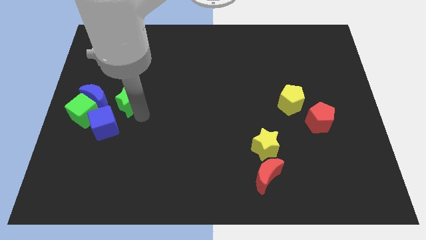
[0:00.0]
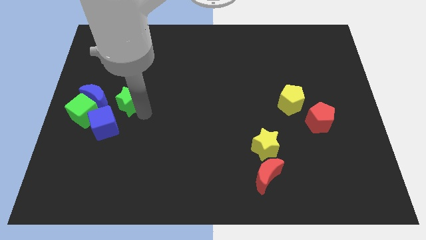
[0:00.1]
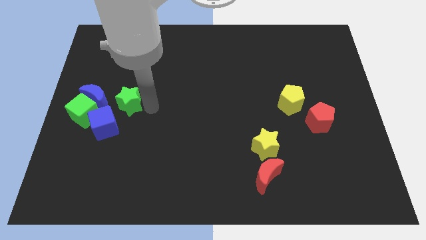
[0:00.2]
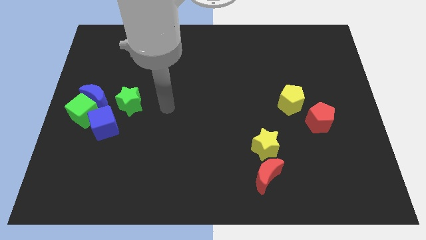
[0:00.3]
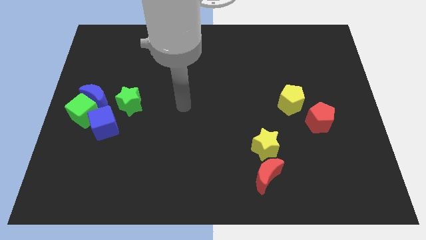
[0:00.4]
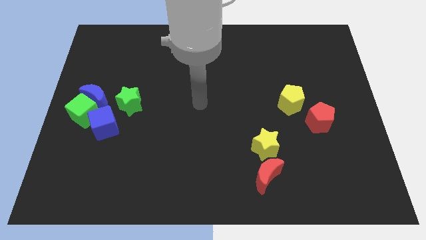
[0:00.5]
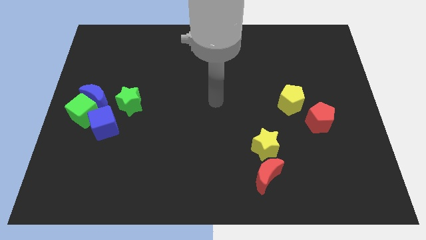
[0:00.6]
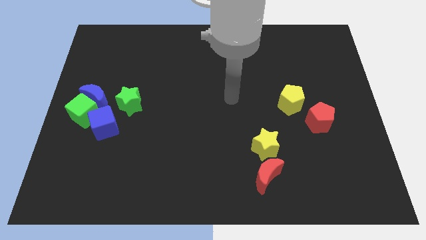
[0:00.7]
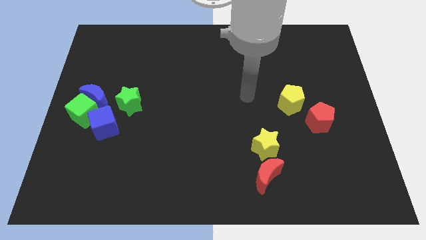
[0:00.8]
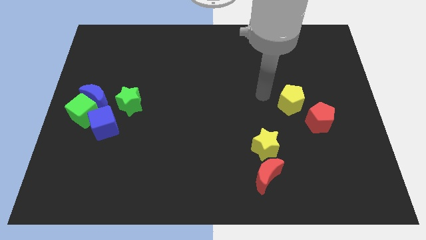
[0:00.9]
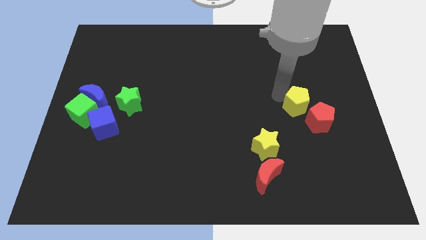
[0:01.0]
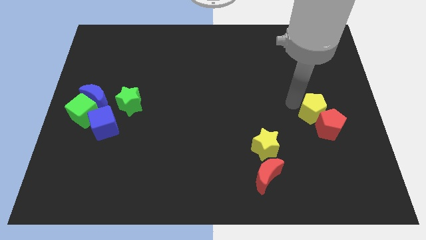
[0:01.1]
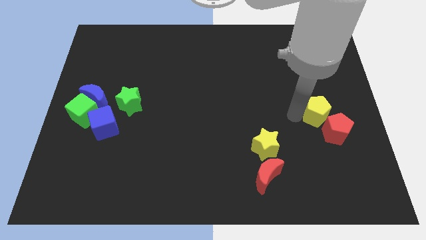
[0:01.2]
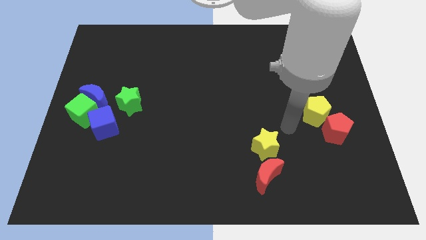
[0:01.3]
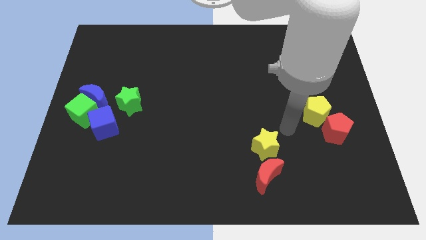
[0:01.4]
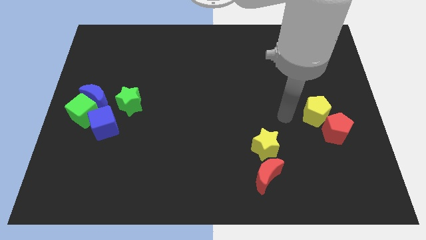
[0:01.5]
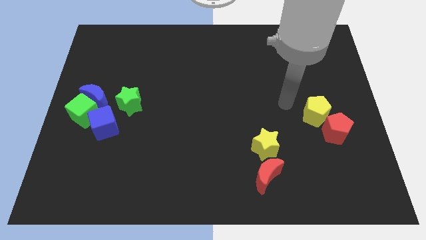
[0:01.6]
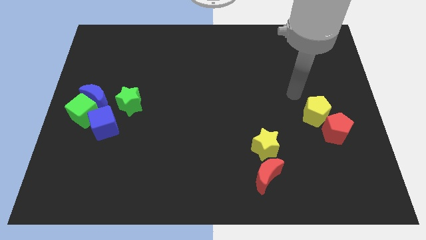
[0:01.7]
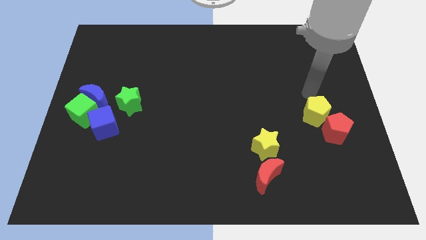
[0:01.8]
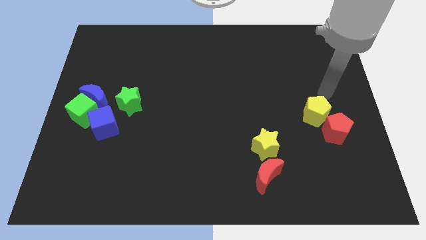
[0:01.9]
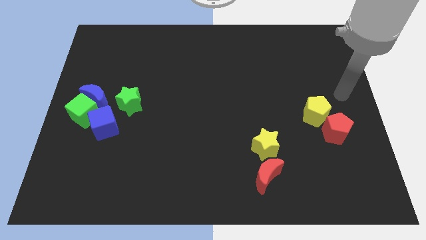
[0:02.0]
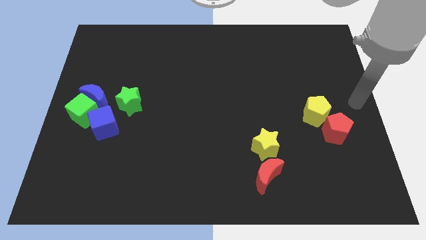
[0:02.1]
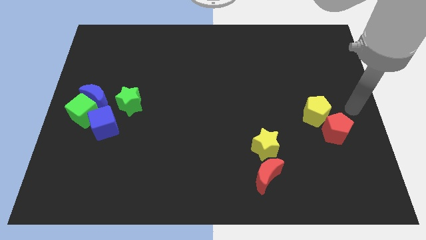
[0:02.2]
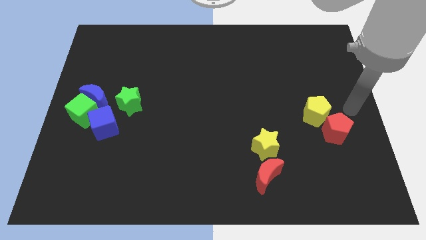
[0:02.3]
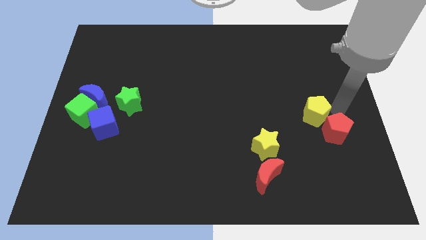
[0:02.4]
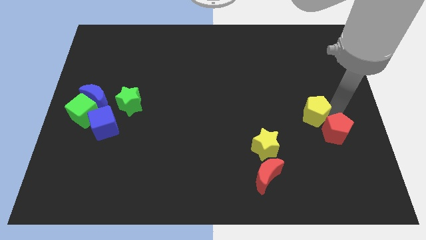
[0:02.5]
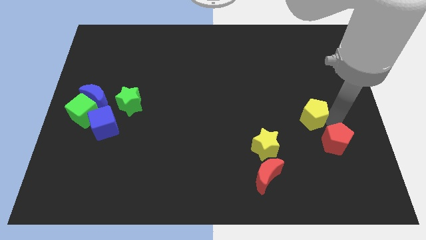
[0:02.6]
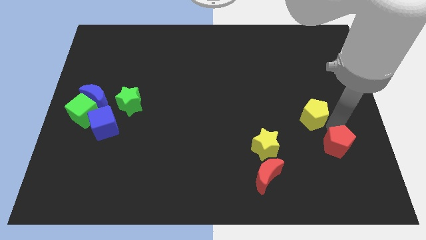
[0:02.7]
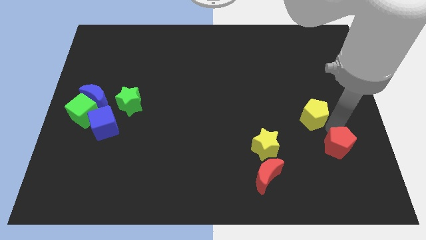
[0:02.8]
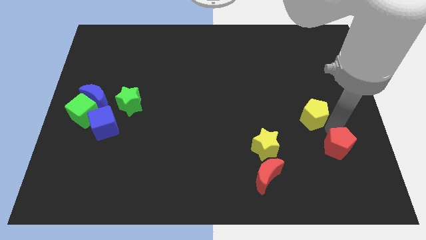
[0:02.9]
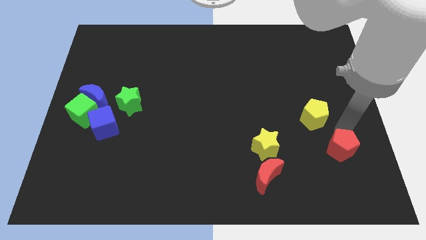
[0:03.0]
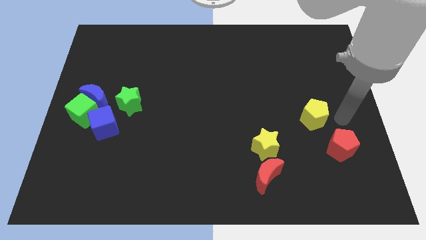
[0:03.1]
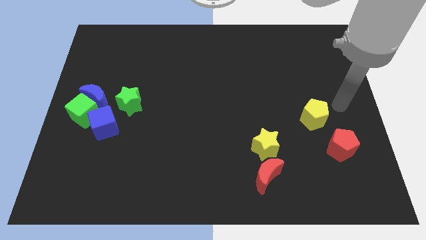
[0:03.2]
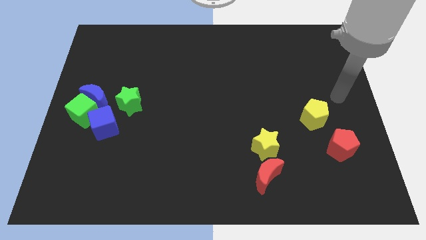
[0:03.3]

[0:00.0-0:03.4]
separate the yellow pentagon and red pentagon

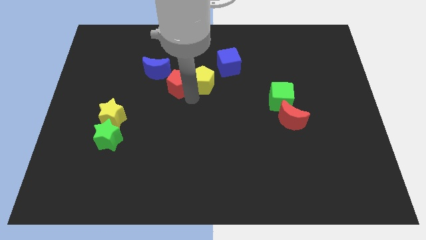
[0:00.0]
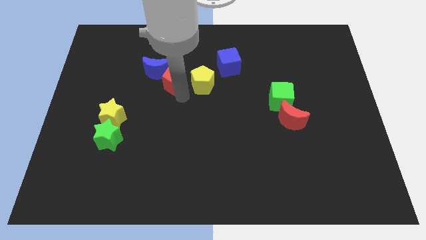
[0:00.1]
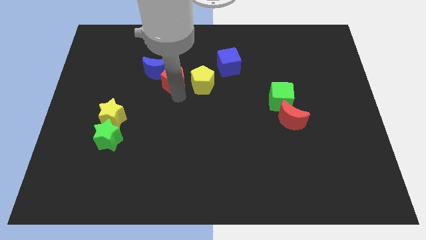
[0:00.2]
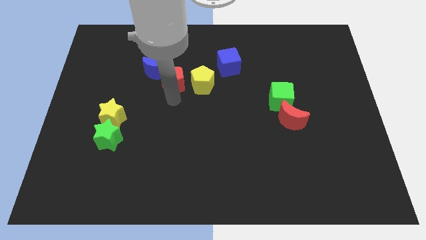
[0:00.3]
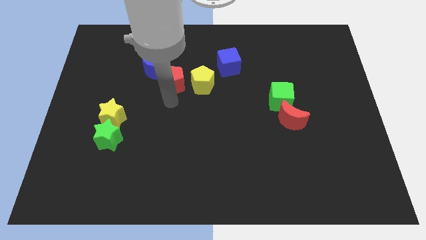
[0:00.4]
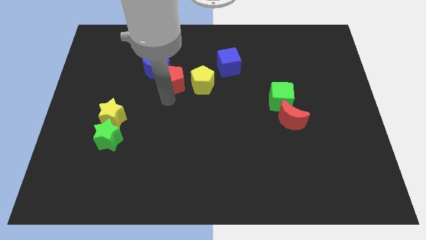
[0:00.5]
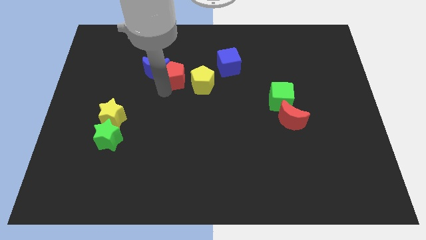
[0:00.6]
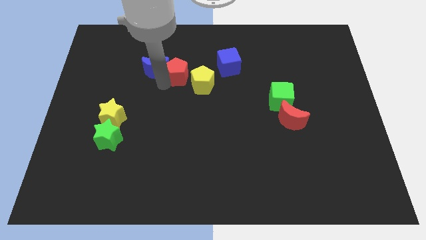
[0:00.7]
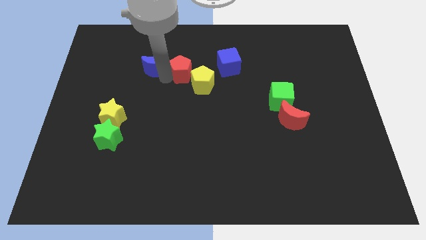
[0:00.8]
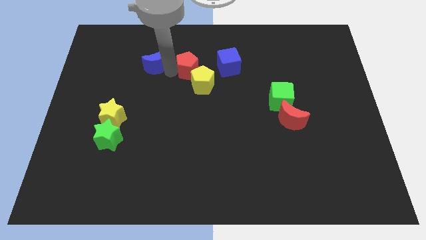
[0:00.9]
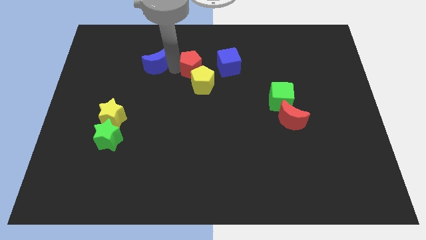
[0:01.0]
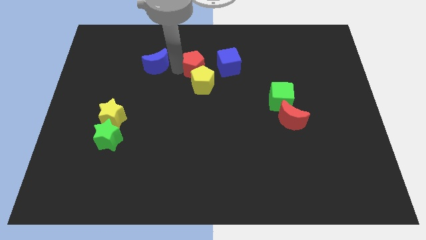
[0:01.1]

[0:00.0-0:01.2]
place the red pentagon in between the blue moon and blue cube

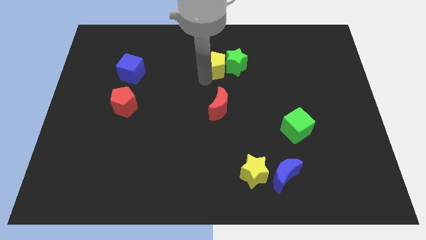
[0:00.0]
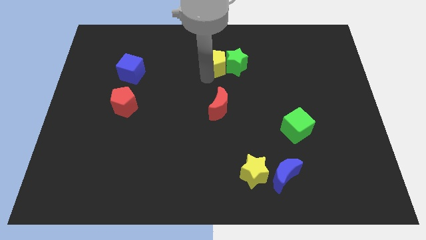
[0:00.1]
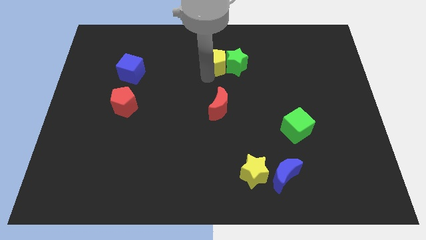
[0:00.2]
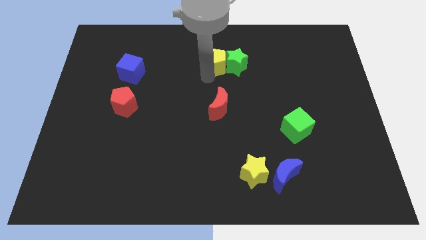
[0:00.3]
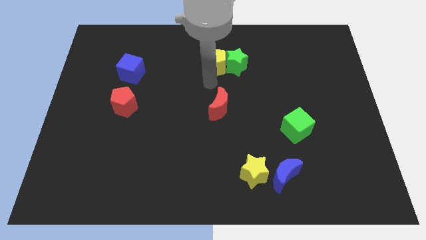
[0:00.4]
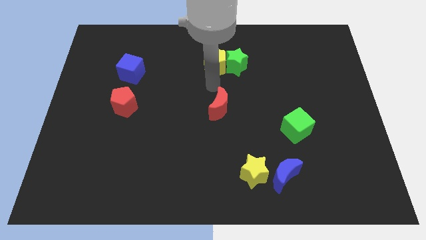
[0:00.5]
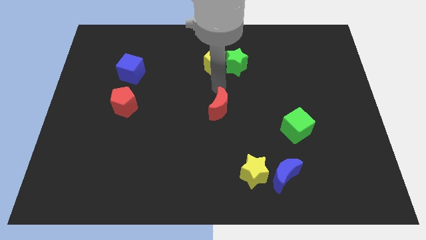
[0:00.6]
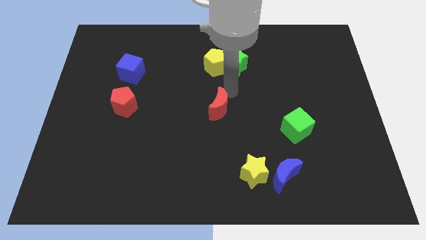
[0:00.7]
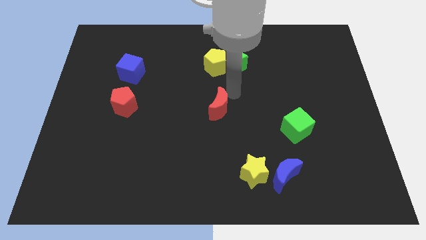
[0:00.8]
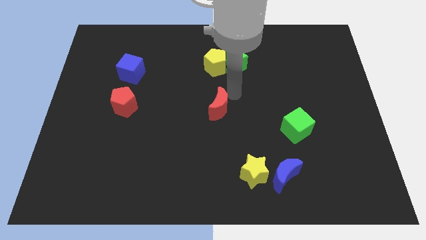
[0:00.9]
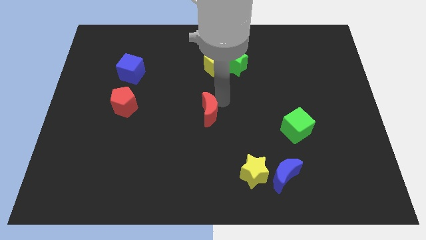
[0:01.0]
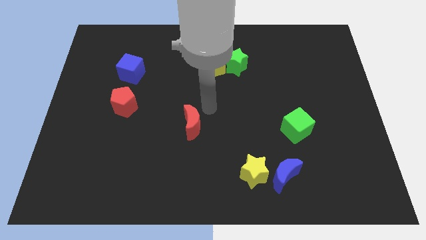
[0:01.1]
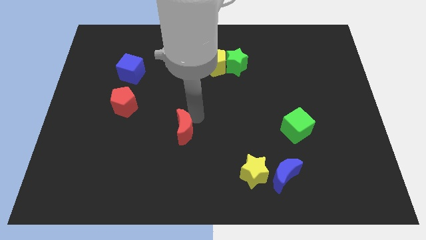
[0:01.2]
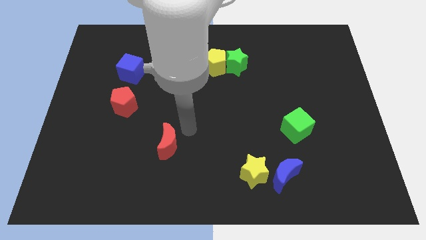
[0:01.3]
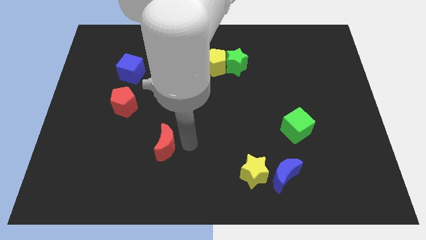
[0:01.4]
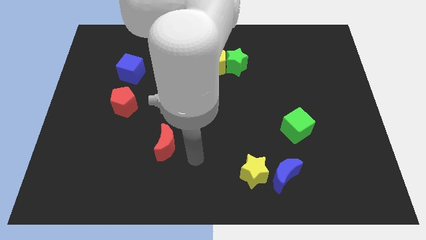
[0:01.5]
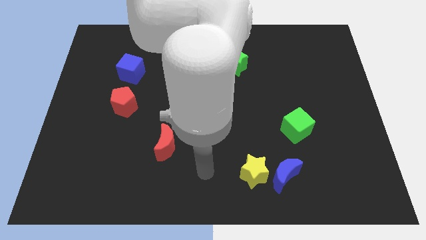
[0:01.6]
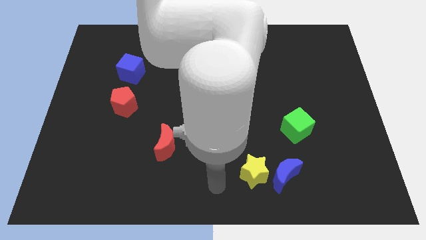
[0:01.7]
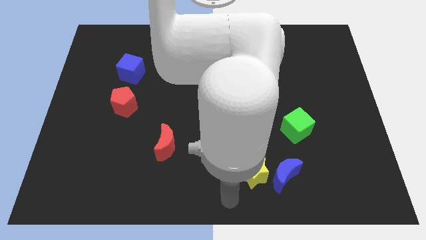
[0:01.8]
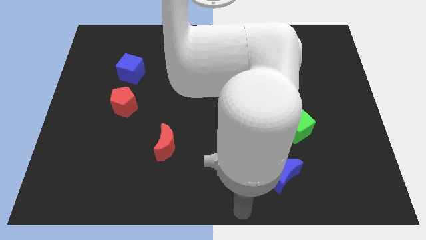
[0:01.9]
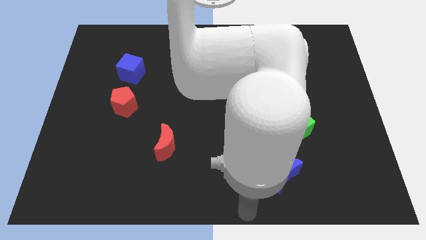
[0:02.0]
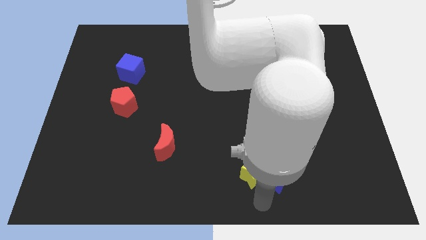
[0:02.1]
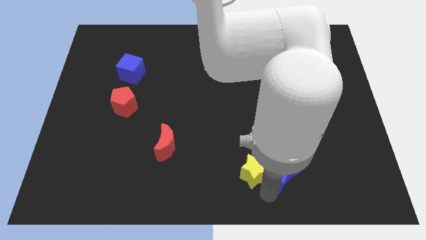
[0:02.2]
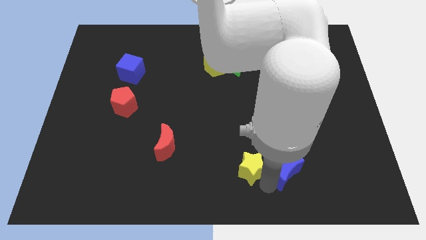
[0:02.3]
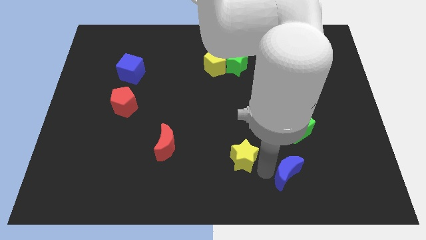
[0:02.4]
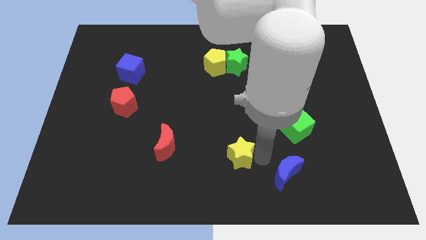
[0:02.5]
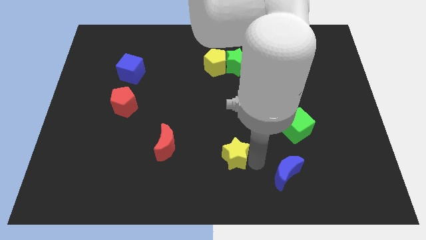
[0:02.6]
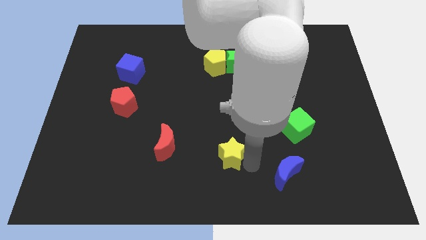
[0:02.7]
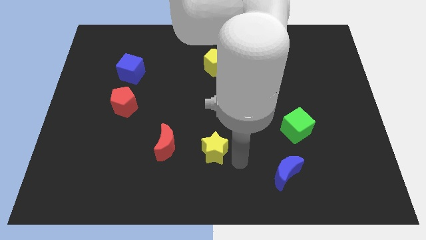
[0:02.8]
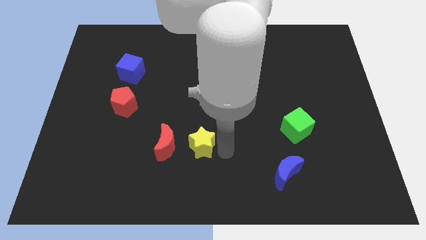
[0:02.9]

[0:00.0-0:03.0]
move red moon and yellow star parallel to each other

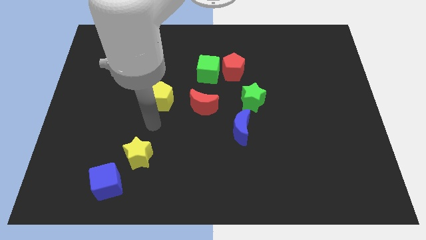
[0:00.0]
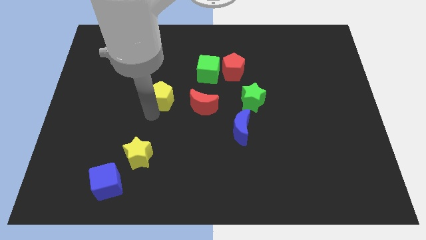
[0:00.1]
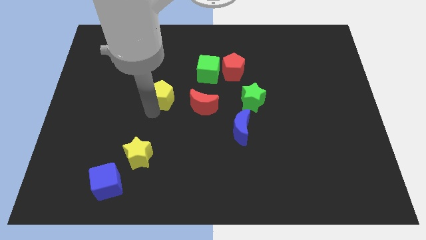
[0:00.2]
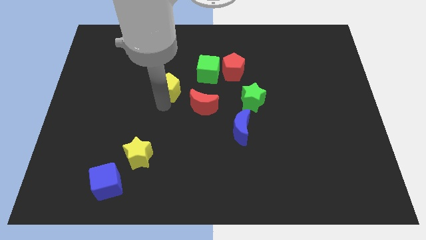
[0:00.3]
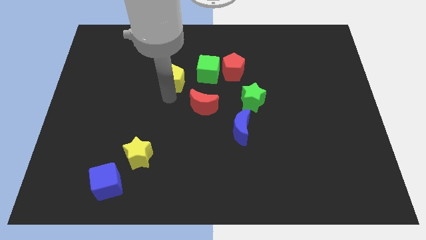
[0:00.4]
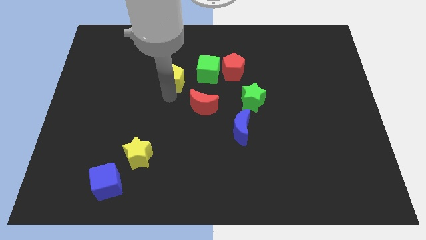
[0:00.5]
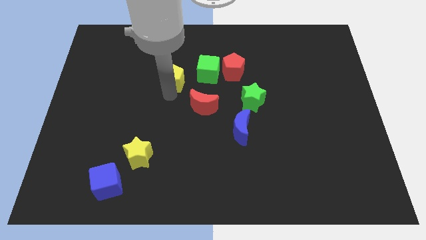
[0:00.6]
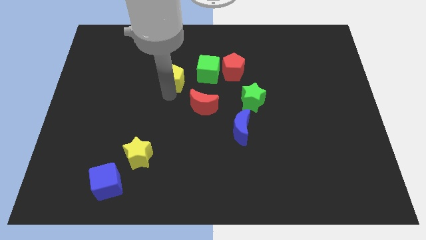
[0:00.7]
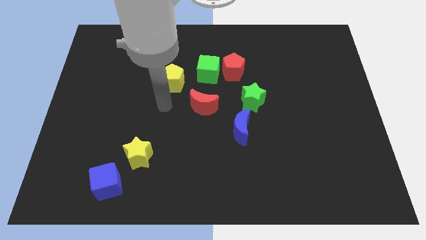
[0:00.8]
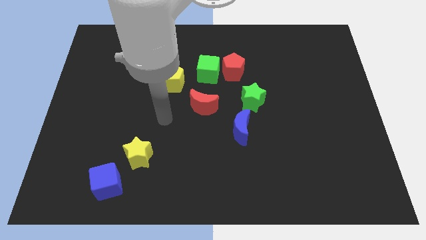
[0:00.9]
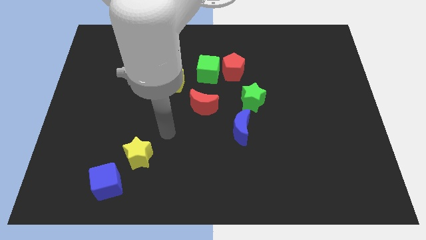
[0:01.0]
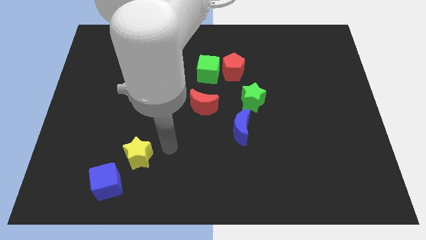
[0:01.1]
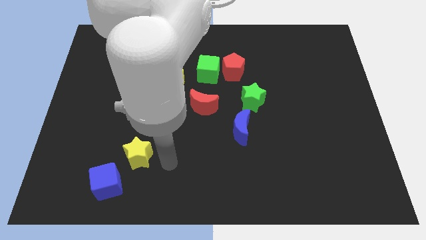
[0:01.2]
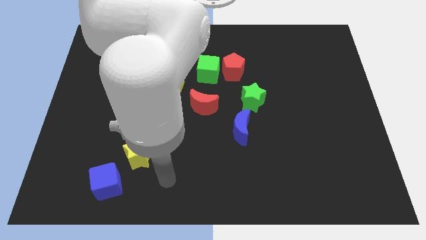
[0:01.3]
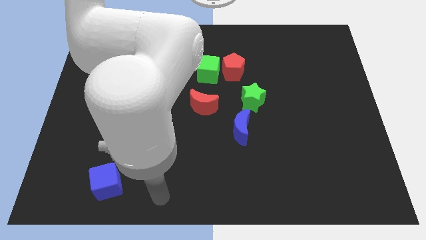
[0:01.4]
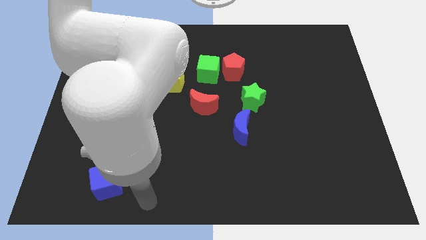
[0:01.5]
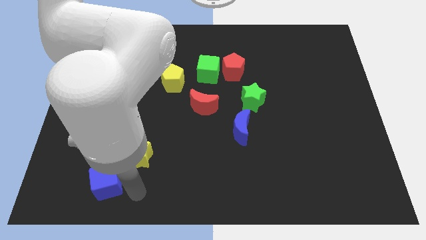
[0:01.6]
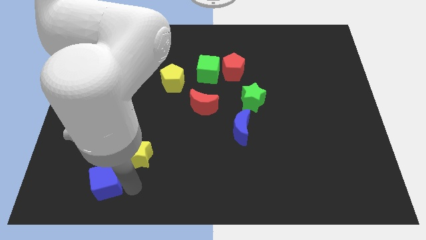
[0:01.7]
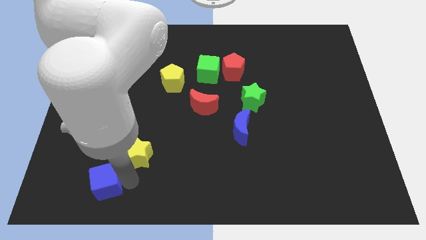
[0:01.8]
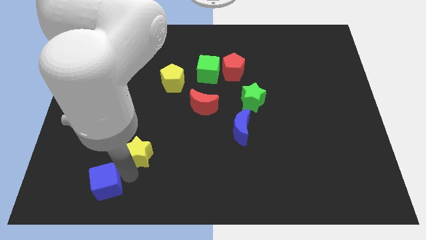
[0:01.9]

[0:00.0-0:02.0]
slightly push the yellow star
